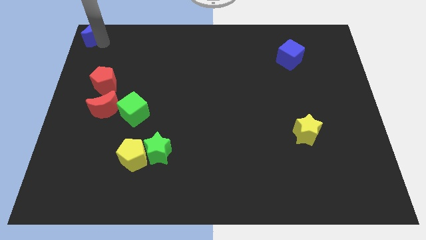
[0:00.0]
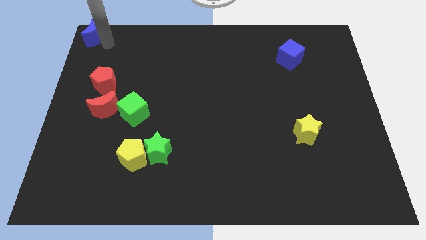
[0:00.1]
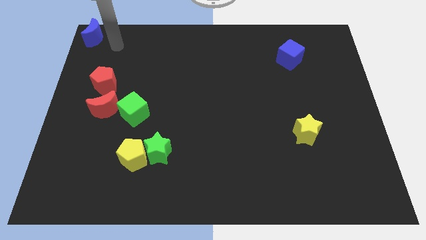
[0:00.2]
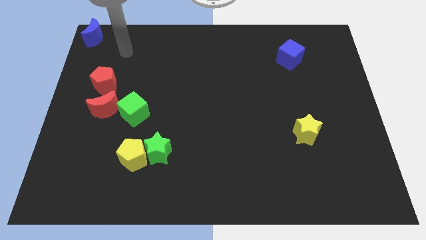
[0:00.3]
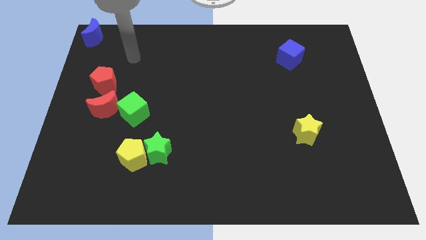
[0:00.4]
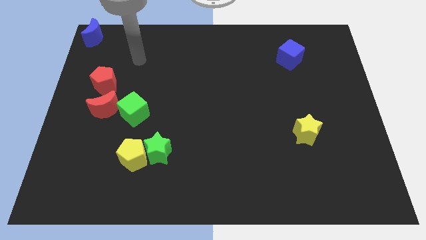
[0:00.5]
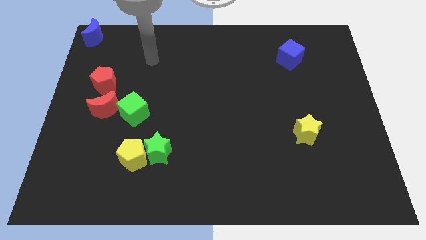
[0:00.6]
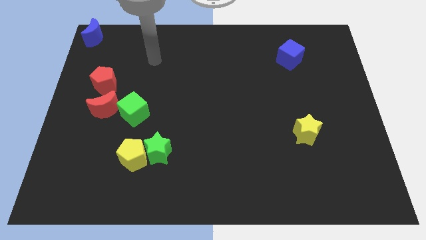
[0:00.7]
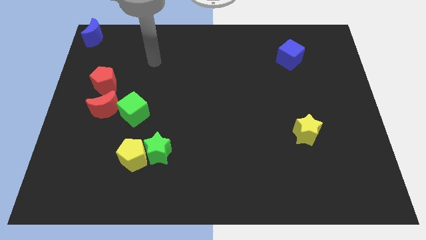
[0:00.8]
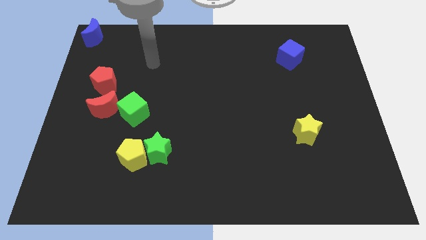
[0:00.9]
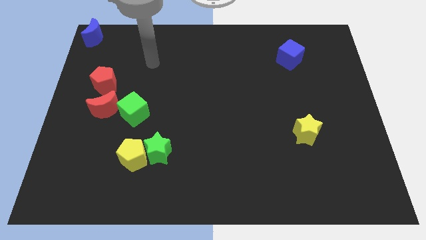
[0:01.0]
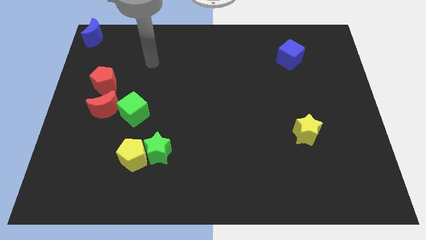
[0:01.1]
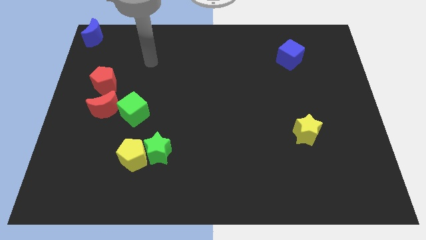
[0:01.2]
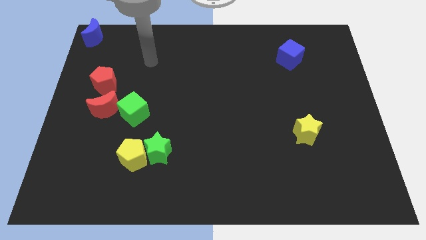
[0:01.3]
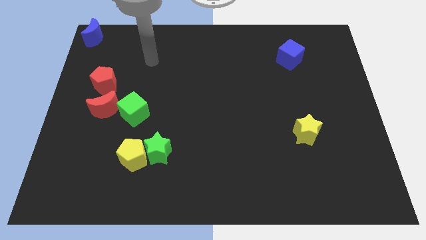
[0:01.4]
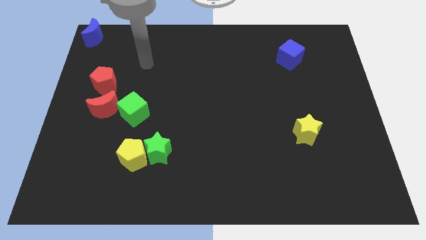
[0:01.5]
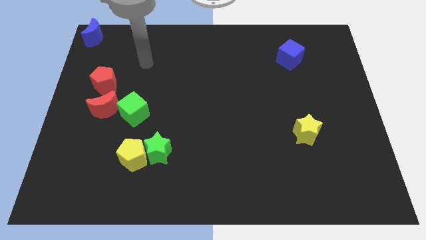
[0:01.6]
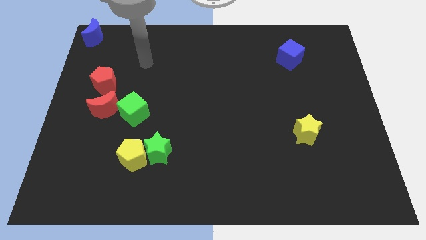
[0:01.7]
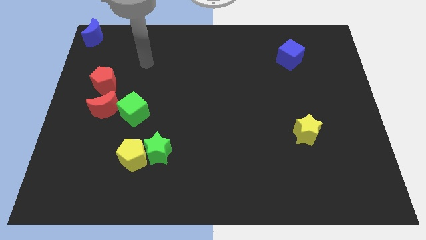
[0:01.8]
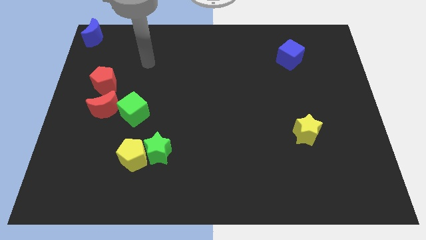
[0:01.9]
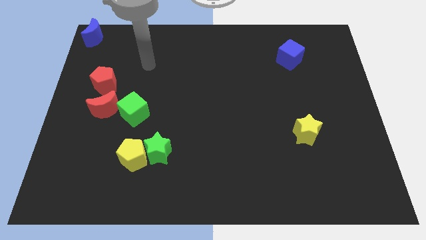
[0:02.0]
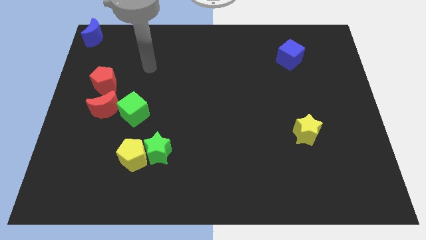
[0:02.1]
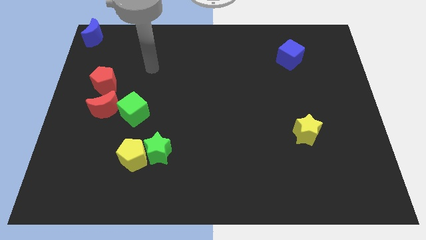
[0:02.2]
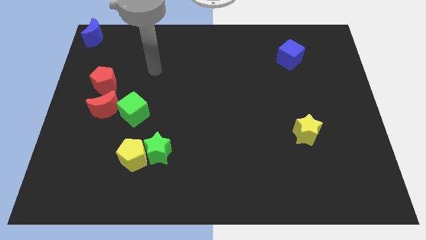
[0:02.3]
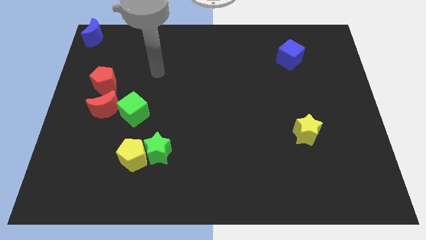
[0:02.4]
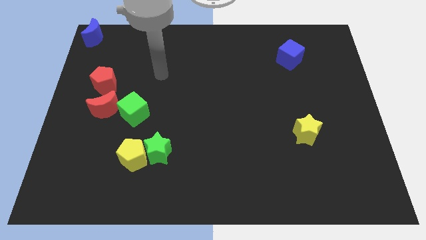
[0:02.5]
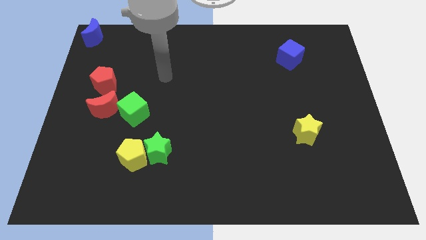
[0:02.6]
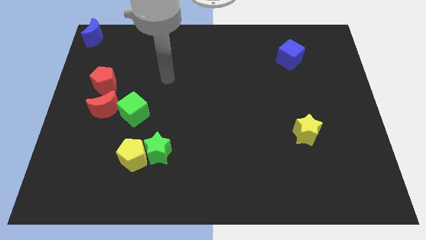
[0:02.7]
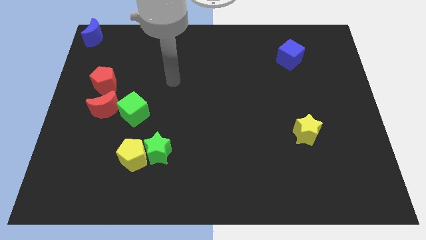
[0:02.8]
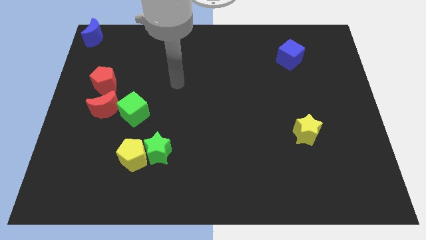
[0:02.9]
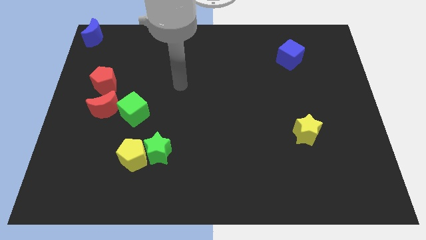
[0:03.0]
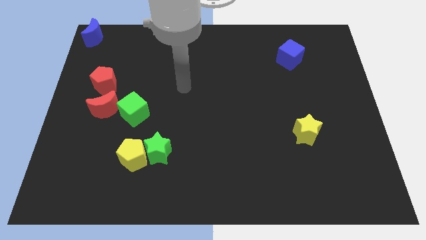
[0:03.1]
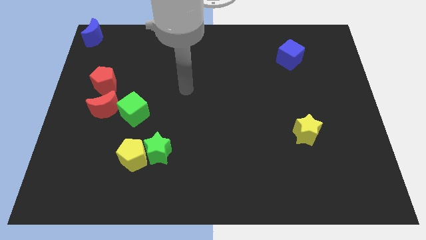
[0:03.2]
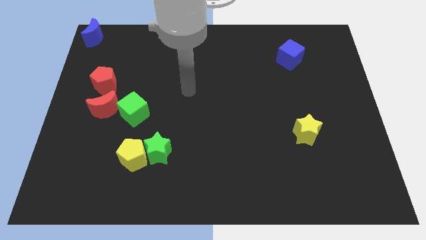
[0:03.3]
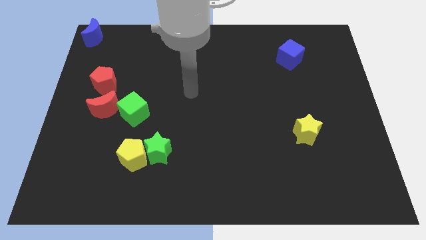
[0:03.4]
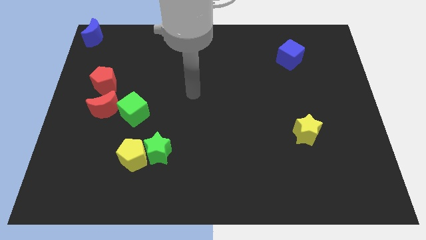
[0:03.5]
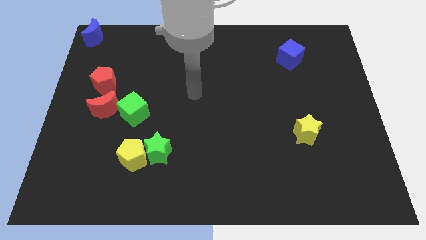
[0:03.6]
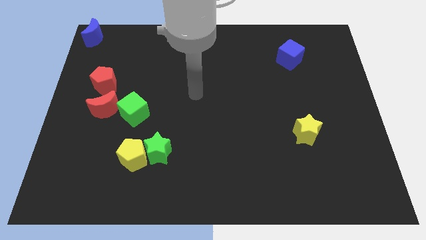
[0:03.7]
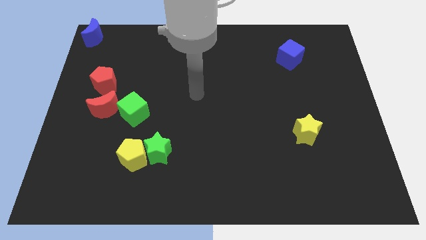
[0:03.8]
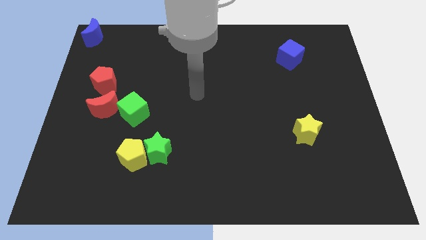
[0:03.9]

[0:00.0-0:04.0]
move your arm towards the center of the board

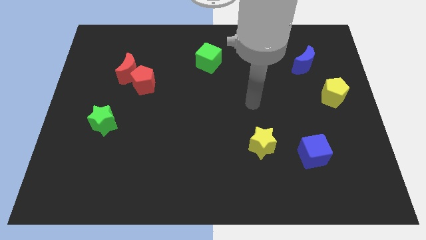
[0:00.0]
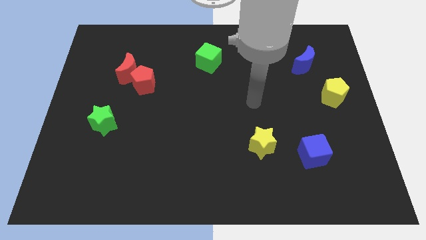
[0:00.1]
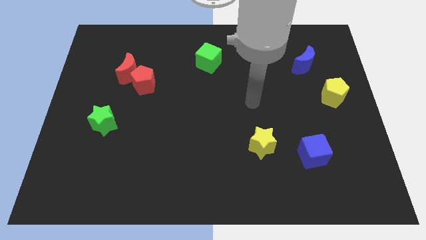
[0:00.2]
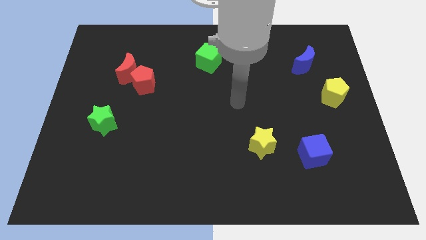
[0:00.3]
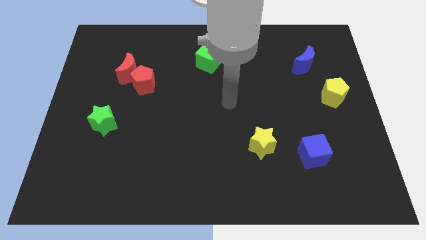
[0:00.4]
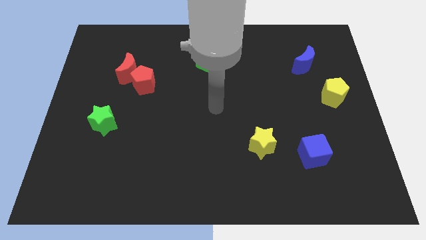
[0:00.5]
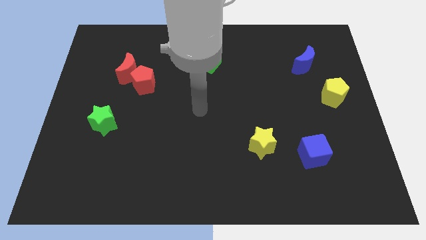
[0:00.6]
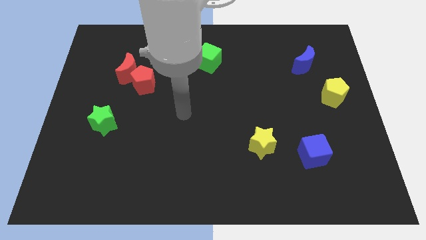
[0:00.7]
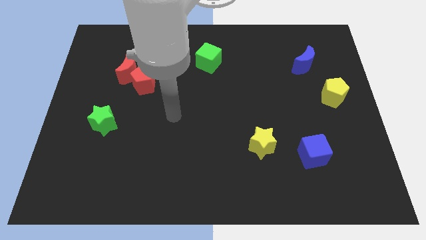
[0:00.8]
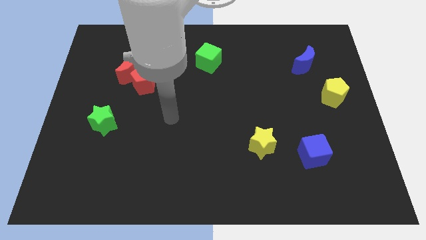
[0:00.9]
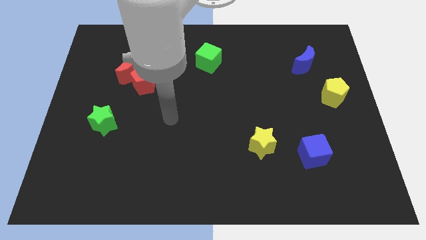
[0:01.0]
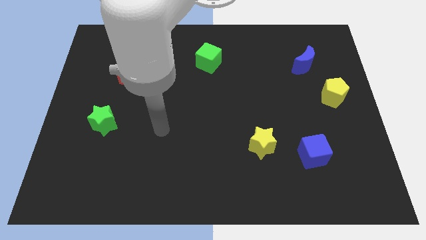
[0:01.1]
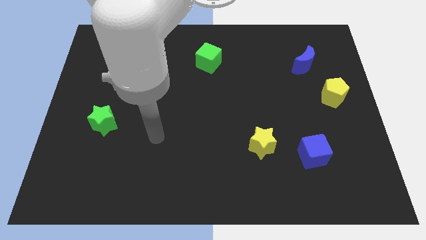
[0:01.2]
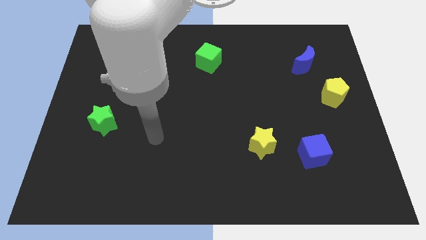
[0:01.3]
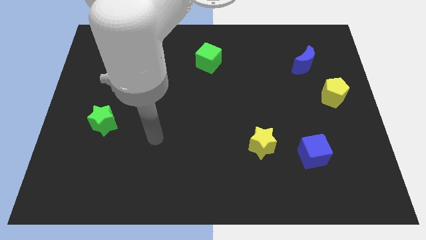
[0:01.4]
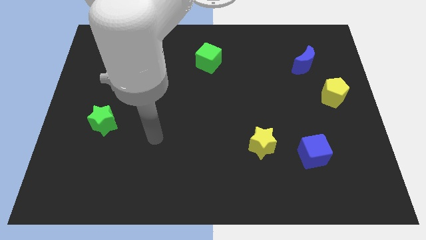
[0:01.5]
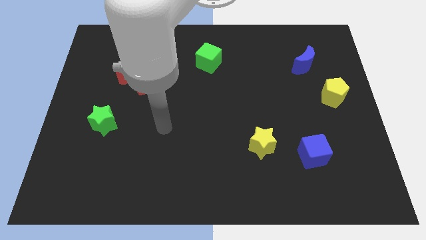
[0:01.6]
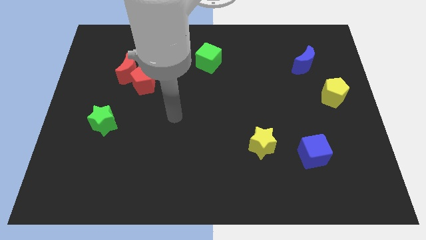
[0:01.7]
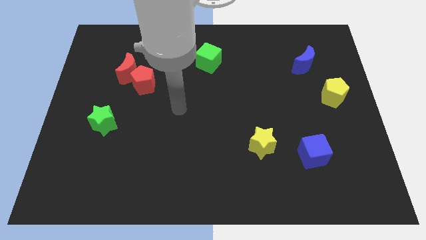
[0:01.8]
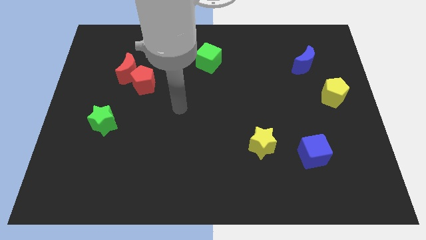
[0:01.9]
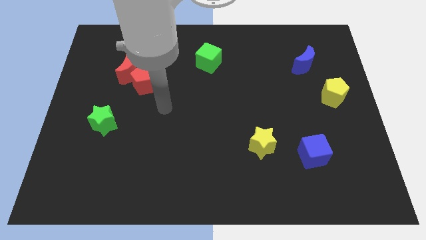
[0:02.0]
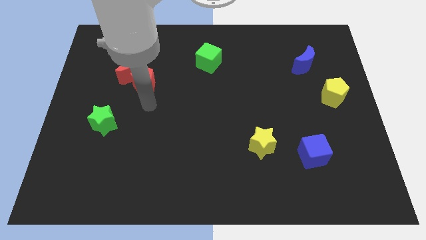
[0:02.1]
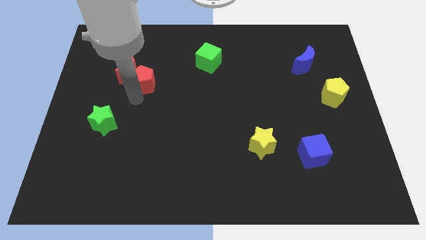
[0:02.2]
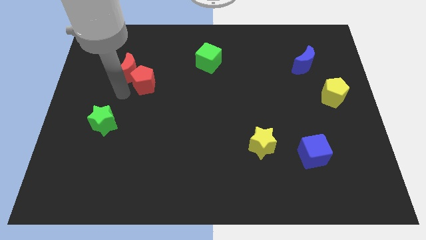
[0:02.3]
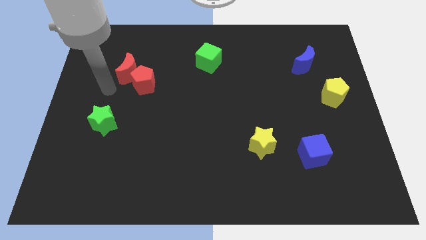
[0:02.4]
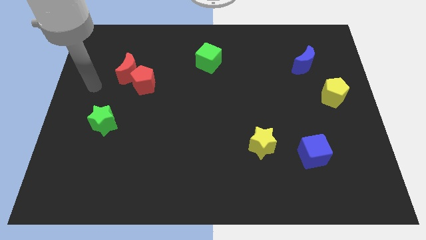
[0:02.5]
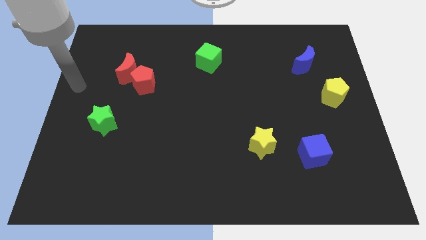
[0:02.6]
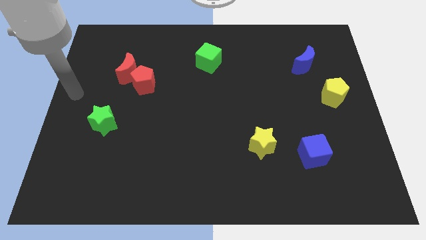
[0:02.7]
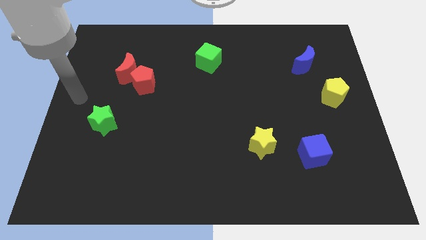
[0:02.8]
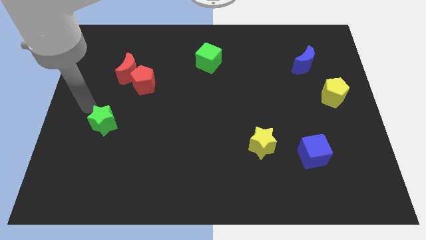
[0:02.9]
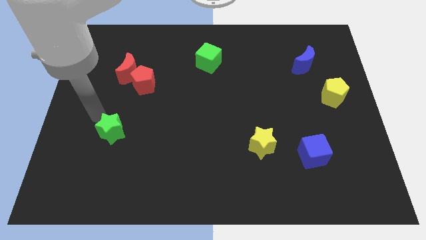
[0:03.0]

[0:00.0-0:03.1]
tap on the top left side of green star

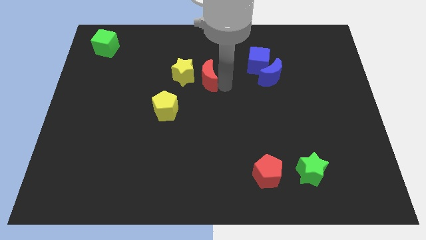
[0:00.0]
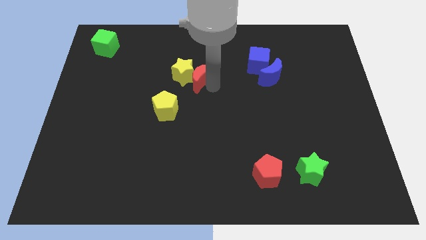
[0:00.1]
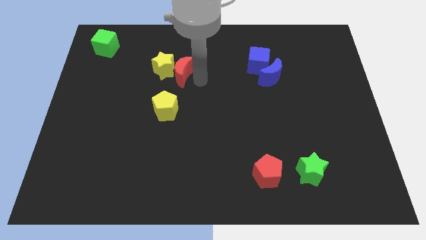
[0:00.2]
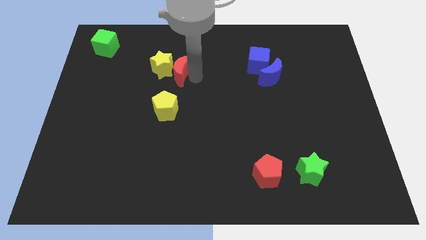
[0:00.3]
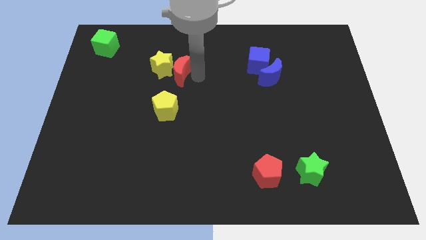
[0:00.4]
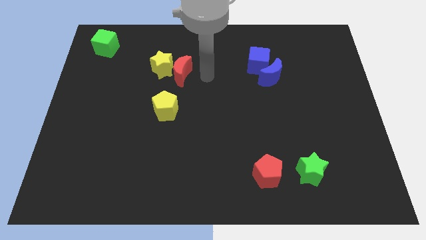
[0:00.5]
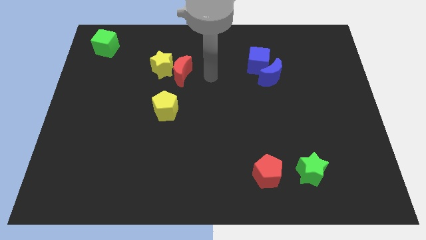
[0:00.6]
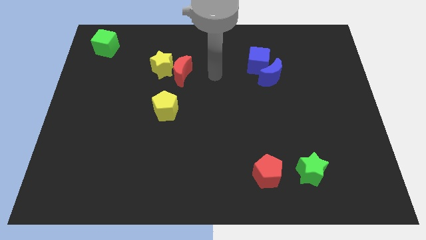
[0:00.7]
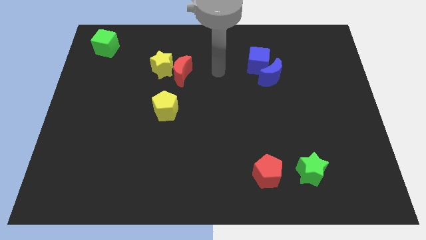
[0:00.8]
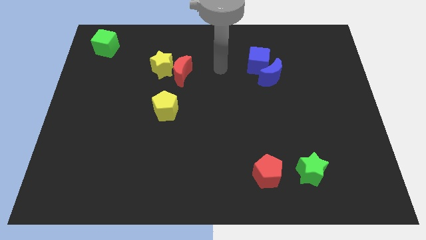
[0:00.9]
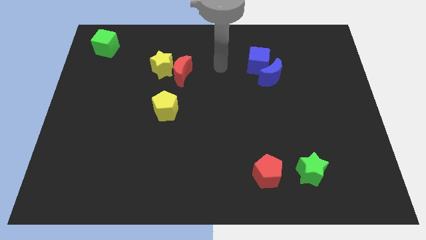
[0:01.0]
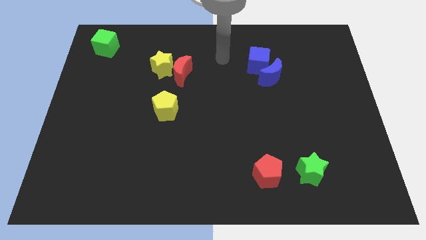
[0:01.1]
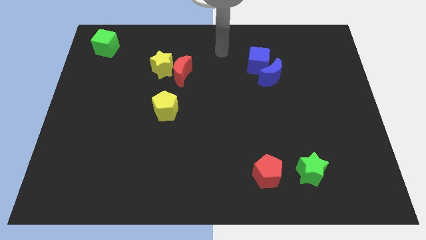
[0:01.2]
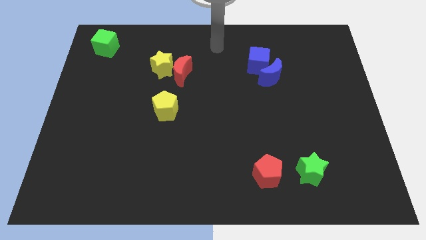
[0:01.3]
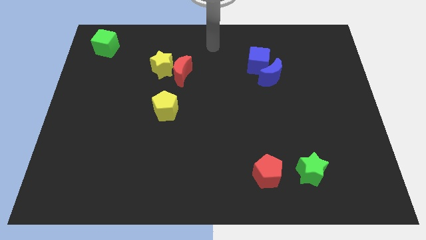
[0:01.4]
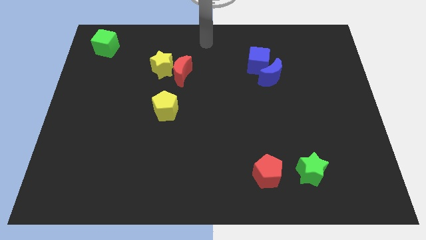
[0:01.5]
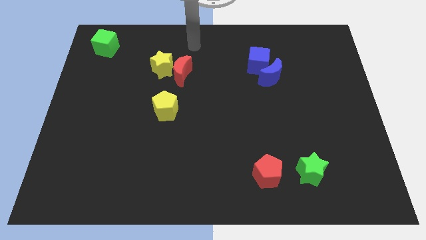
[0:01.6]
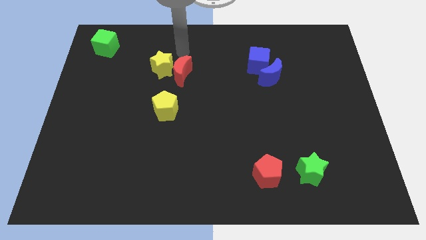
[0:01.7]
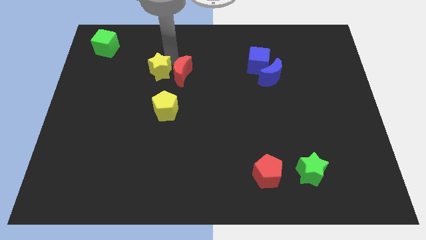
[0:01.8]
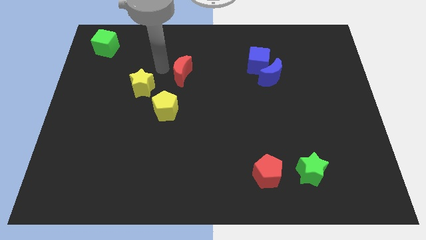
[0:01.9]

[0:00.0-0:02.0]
separate yellow star and red moon
